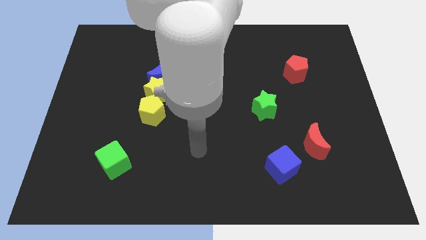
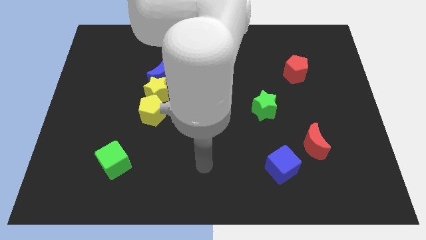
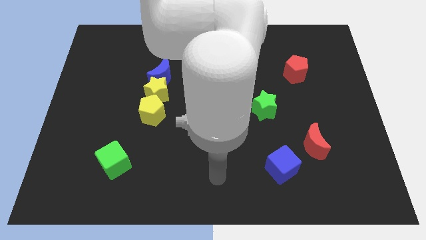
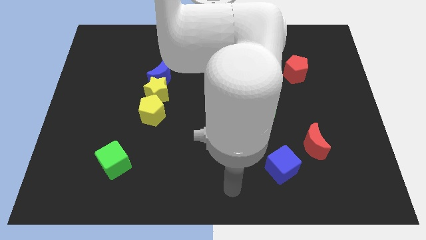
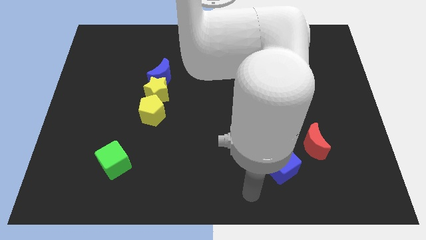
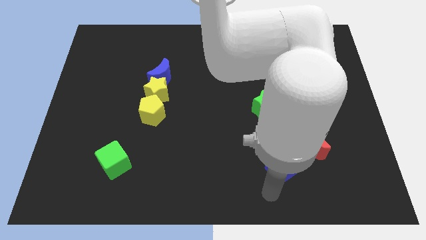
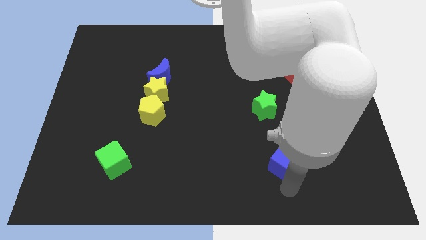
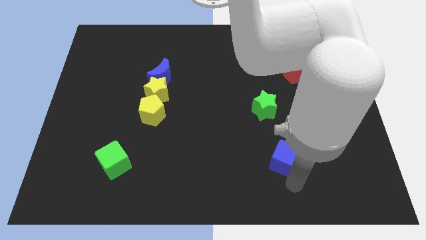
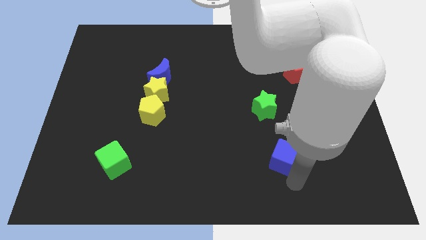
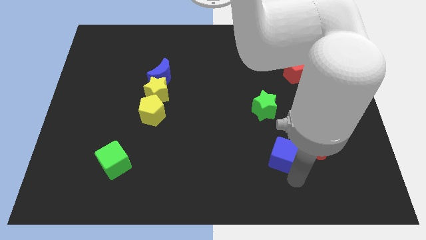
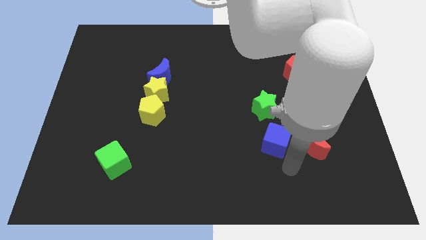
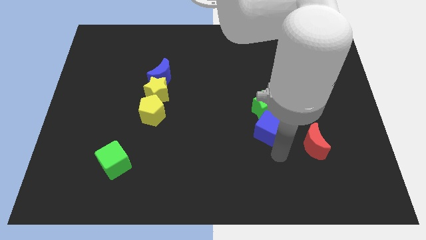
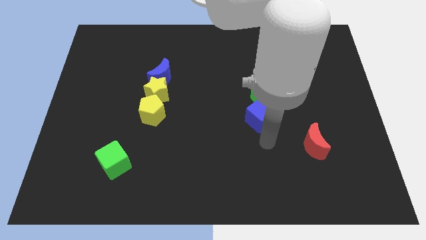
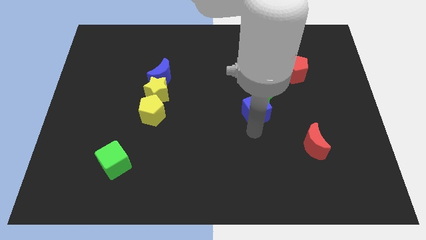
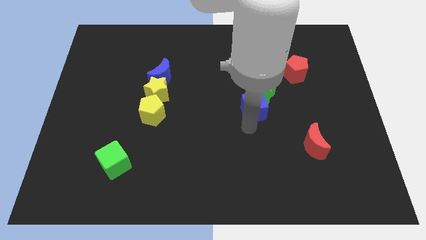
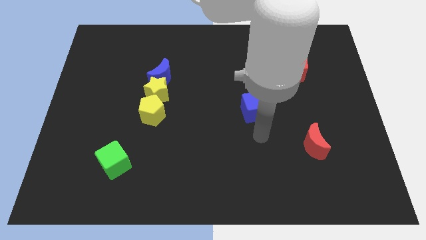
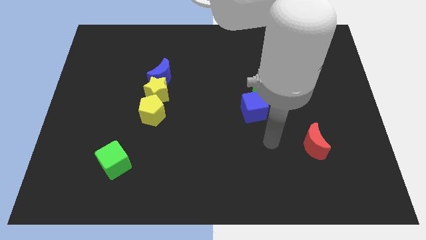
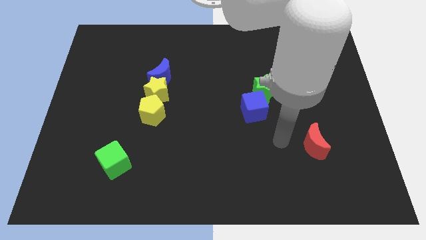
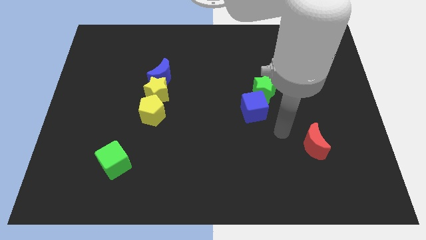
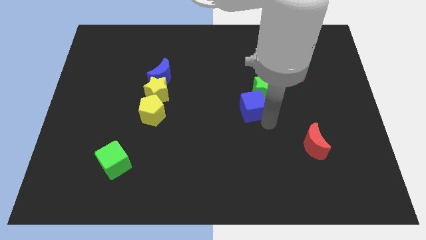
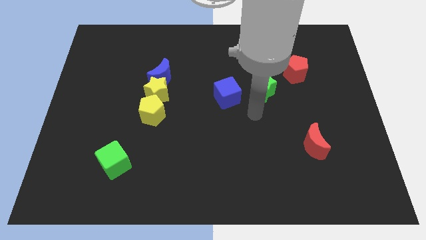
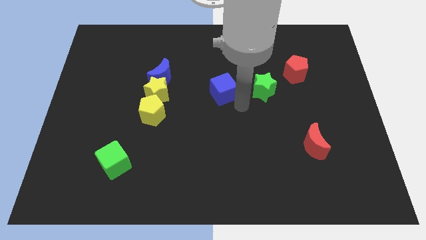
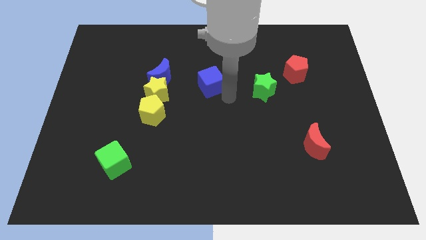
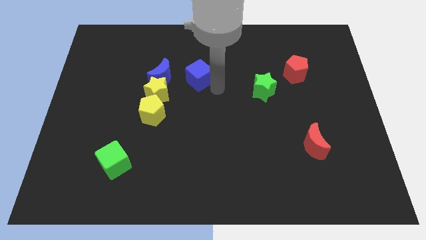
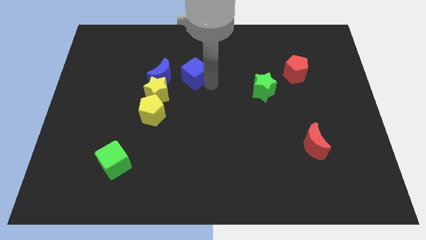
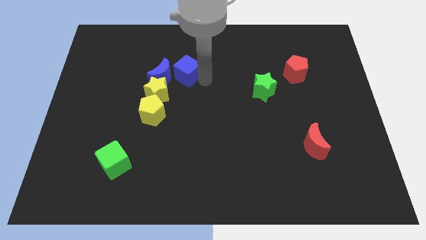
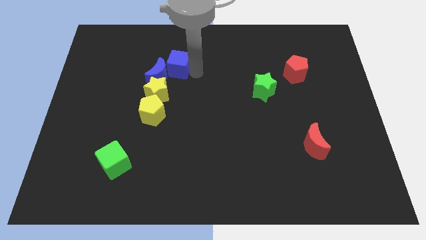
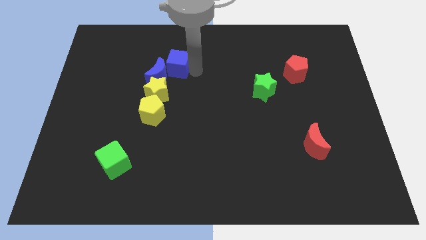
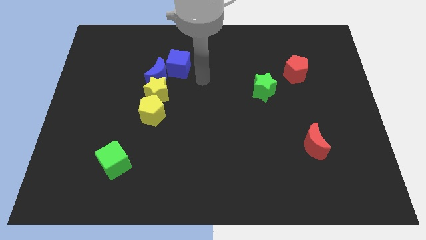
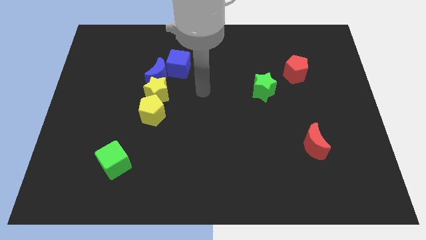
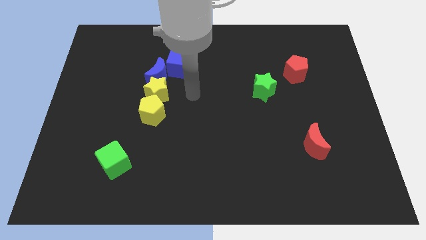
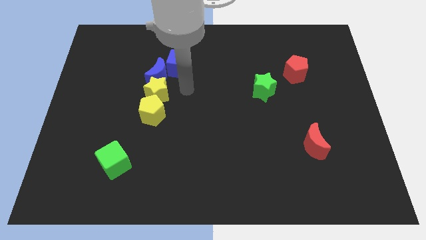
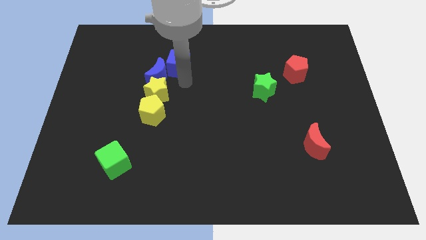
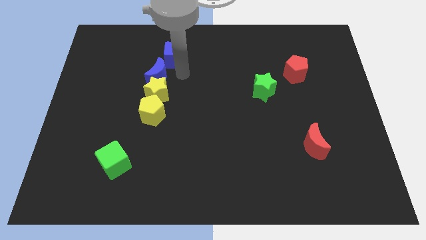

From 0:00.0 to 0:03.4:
push the blue cube into the blue crescent

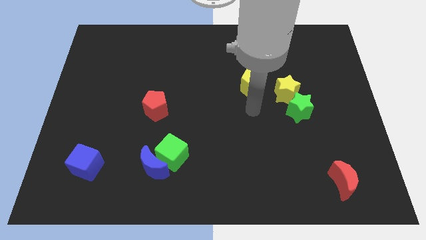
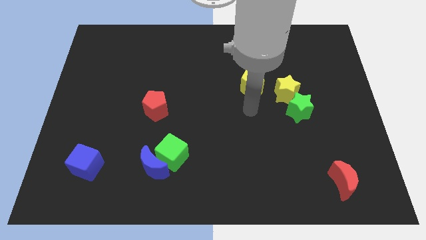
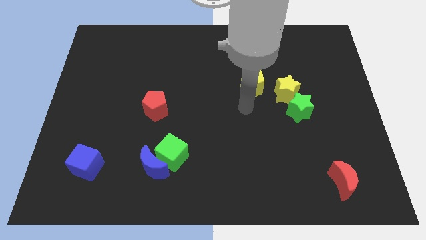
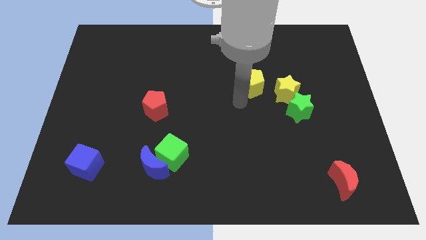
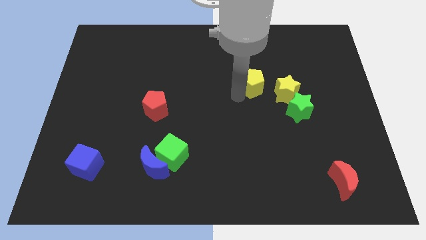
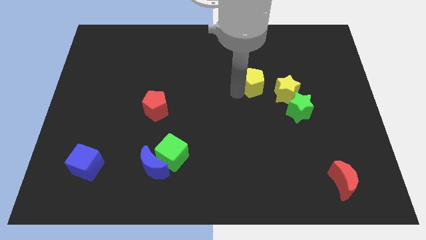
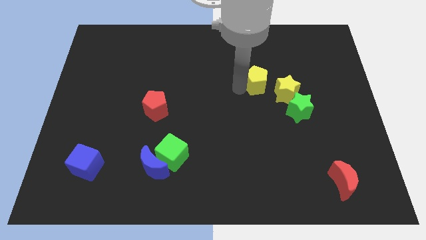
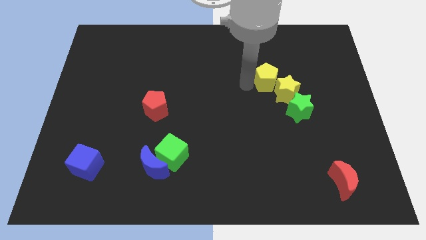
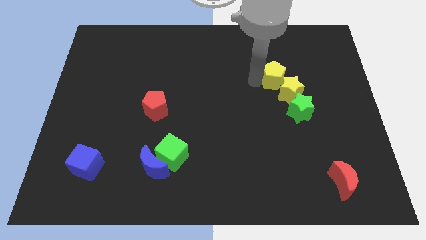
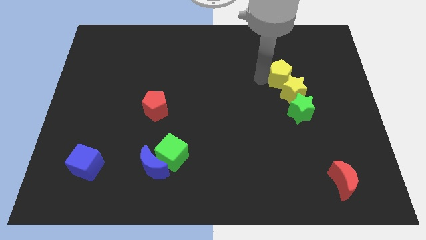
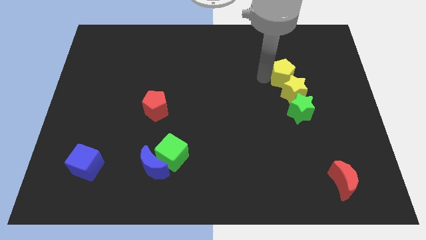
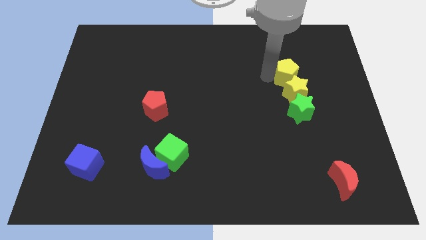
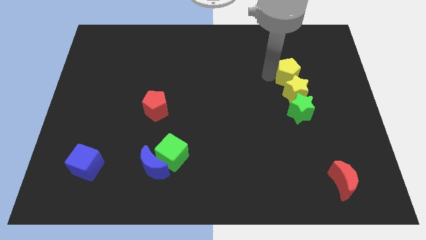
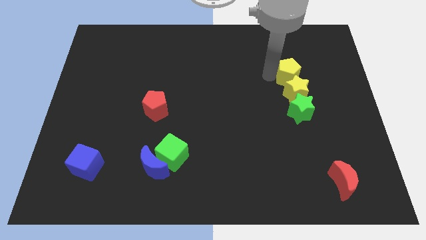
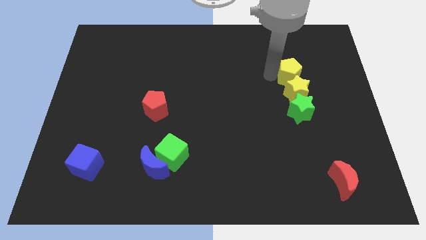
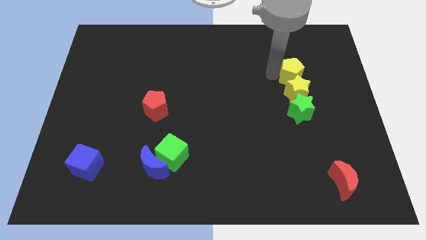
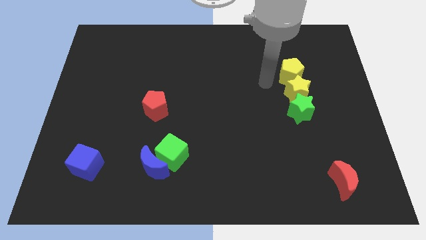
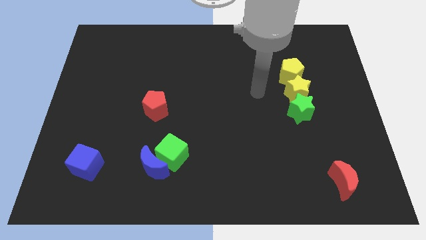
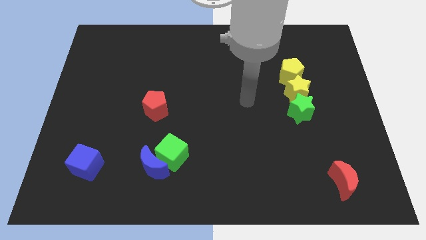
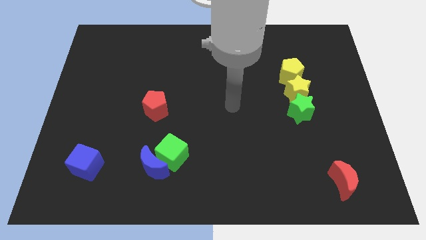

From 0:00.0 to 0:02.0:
move the yellow pentagon to the top of the yellow star

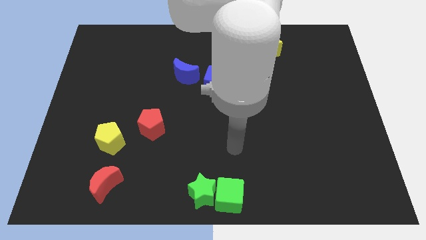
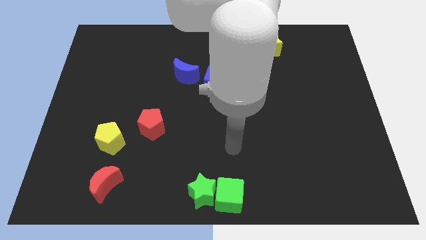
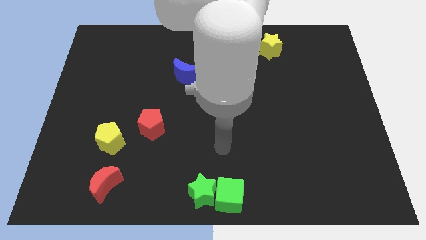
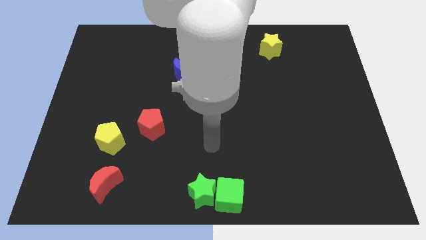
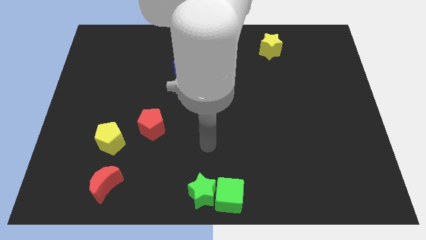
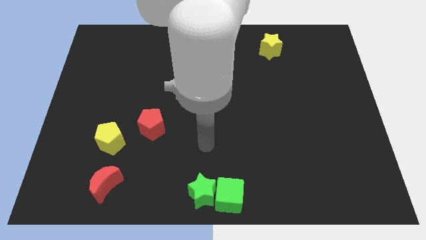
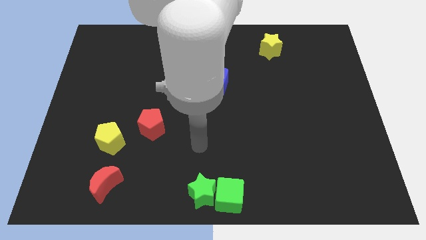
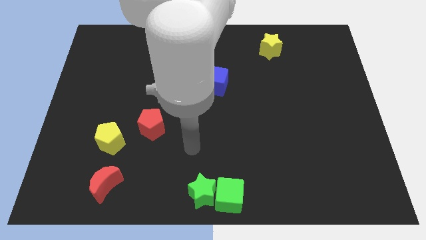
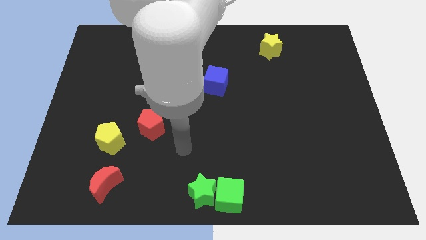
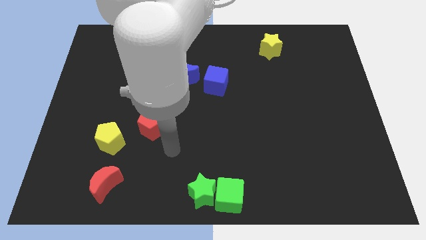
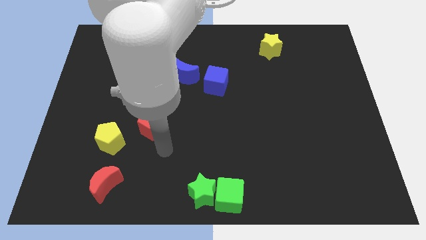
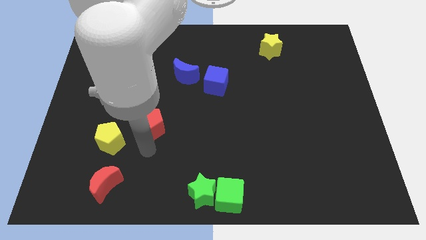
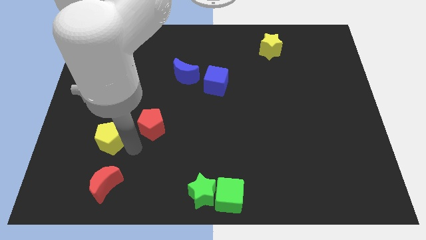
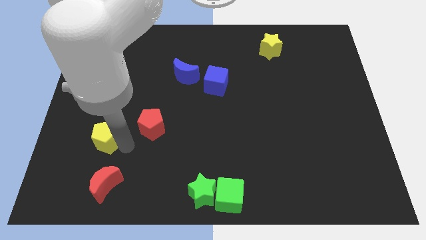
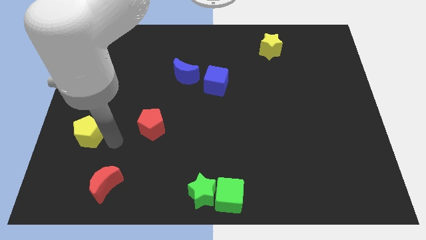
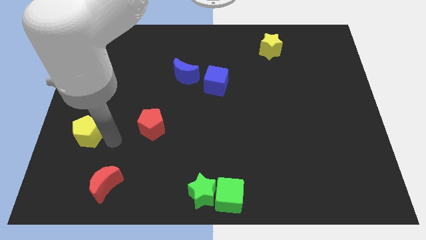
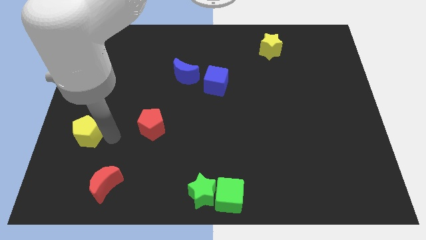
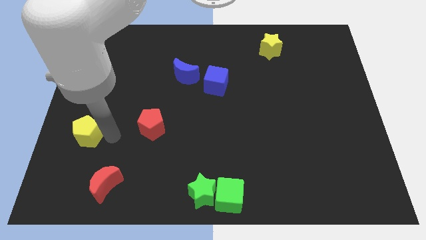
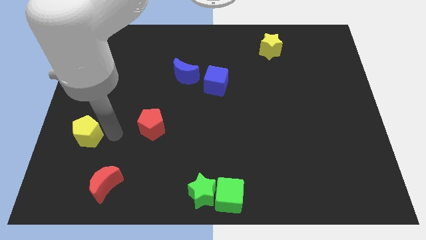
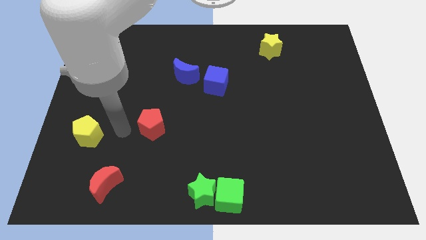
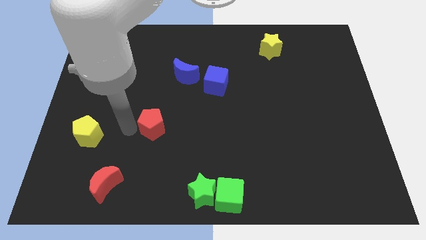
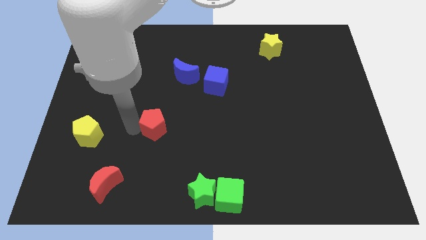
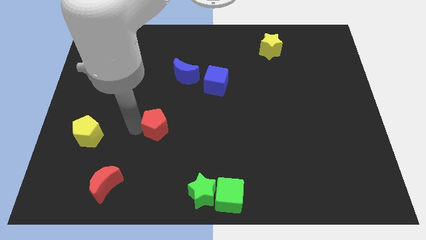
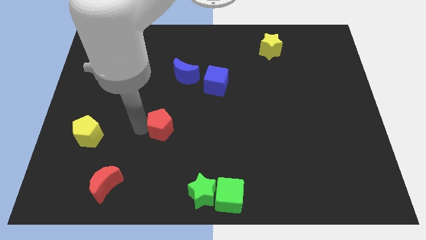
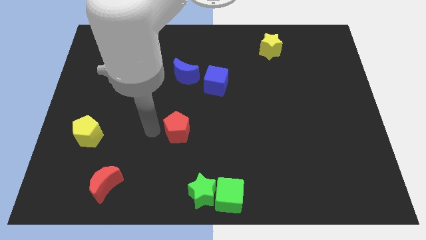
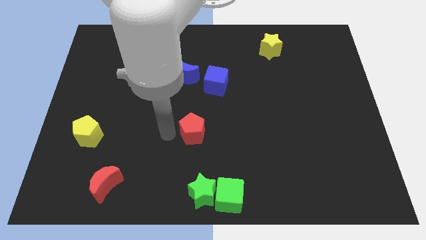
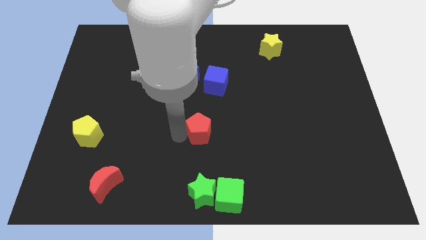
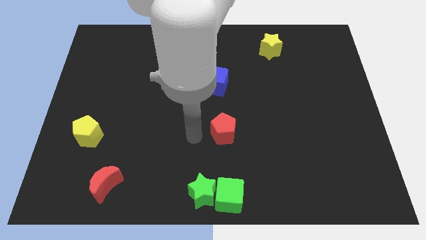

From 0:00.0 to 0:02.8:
push red pentagon below blue cube

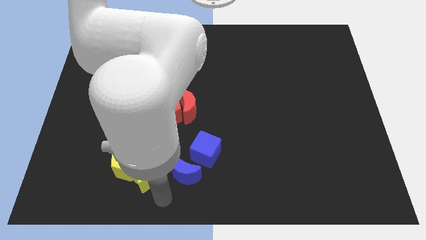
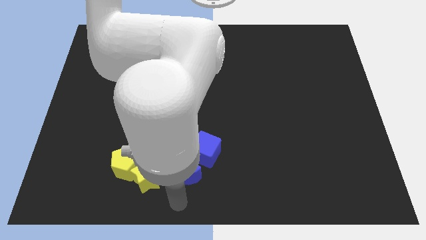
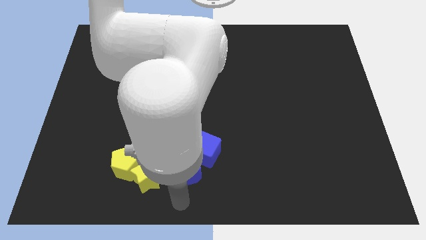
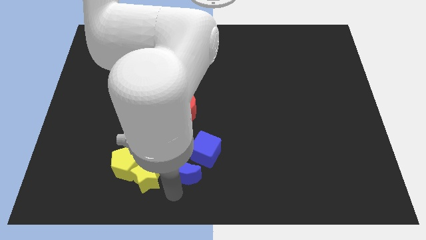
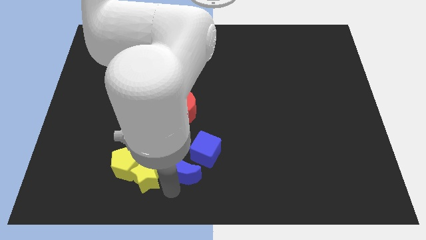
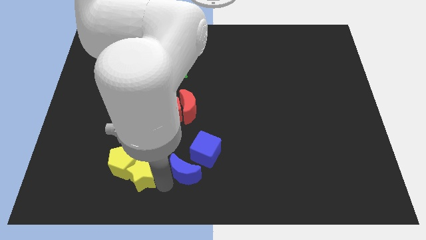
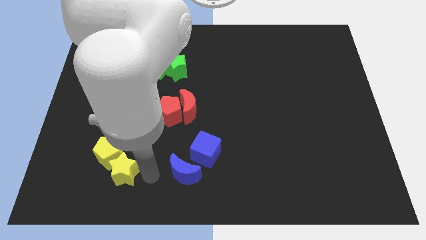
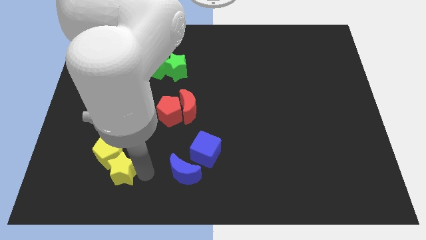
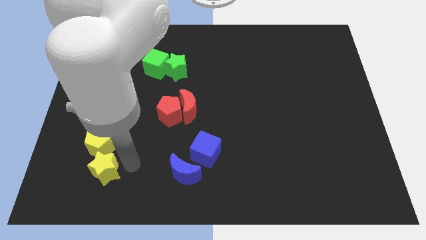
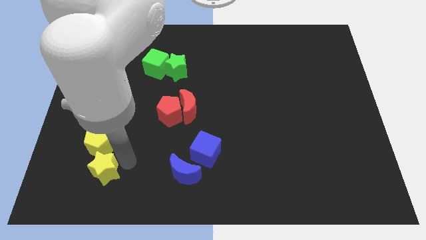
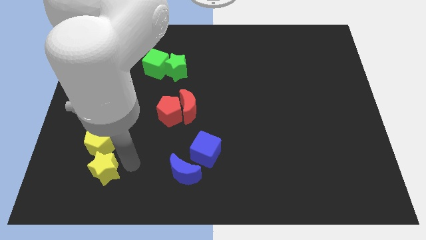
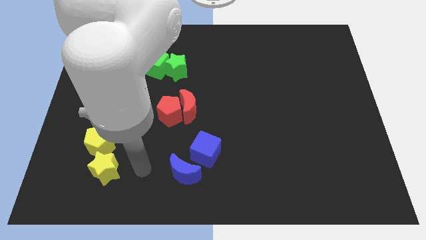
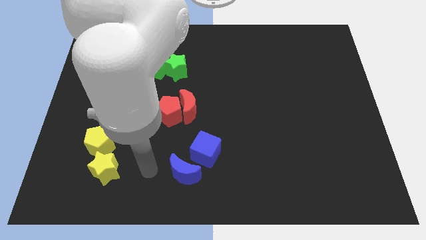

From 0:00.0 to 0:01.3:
place the group of yellow blocks parallel to the blue blocks
